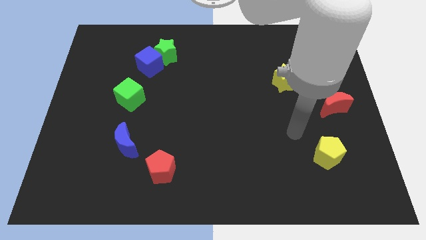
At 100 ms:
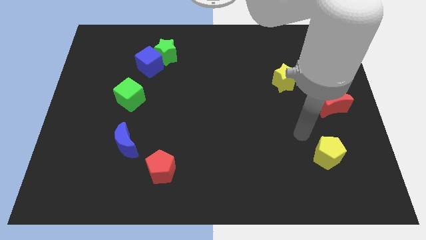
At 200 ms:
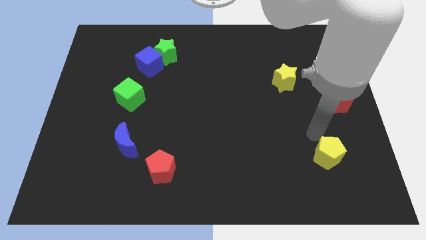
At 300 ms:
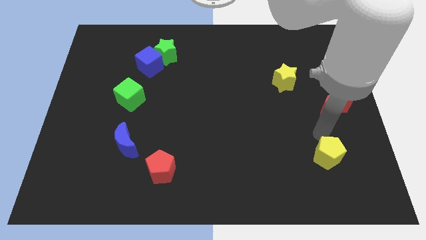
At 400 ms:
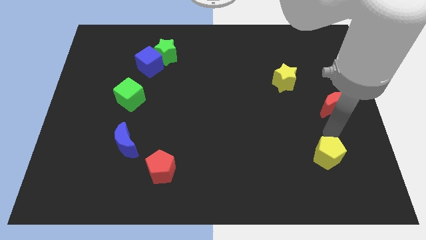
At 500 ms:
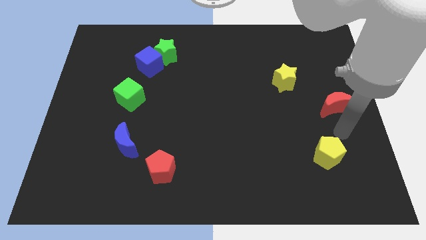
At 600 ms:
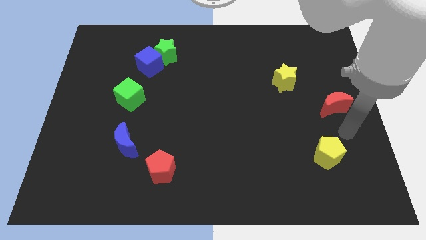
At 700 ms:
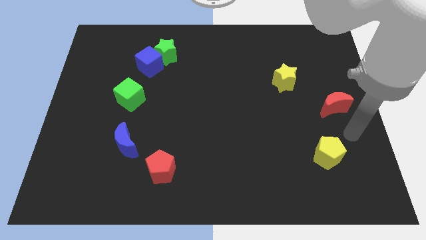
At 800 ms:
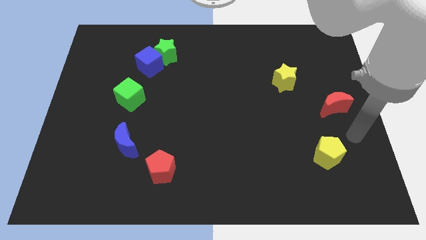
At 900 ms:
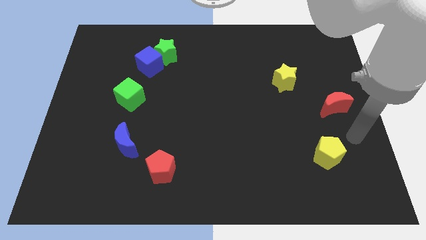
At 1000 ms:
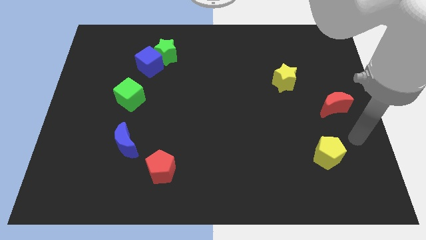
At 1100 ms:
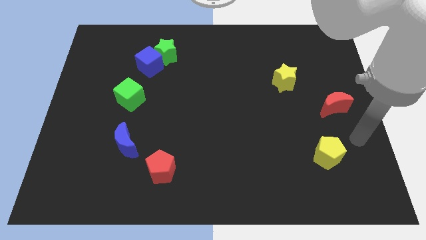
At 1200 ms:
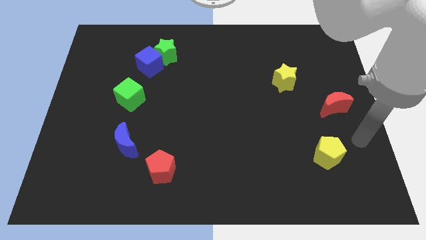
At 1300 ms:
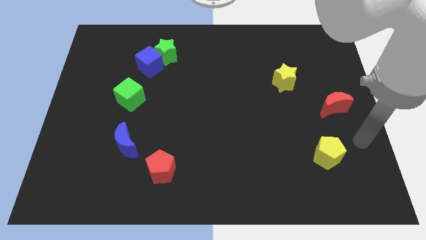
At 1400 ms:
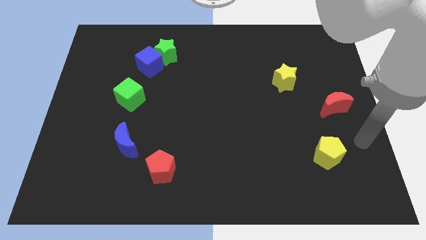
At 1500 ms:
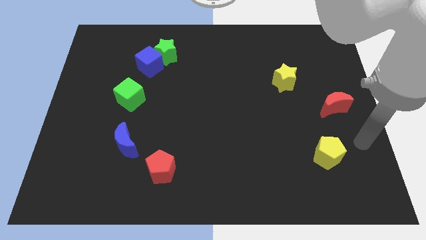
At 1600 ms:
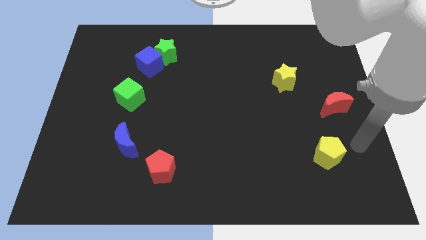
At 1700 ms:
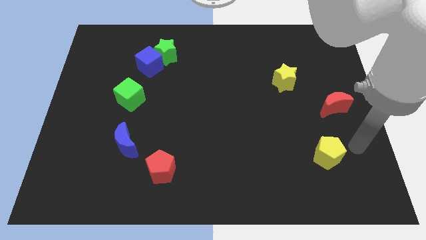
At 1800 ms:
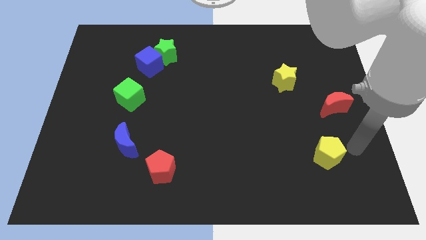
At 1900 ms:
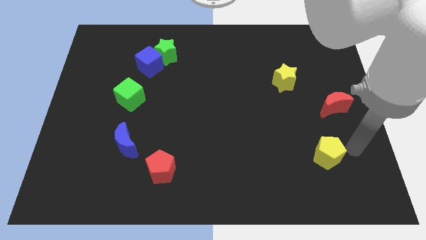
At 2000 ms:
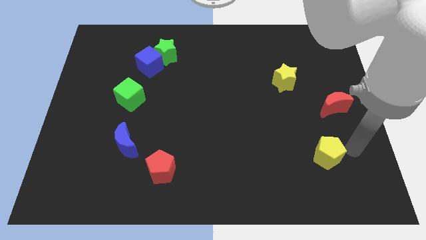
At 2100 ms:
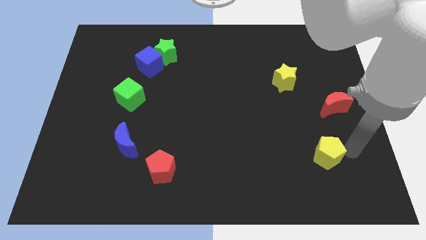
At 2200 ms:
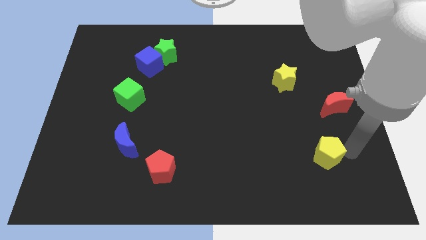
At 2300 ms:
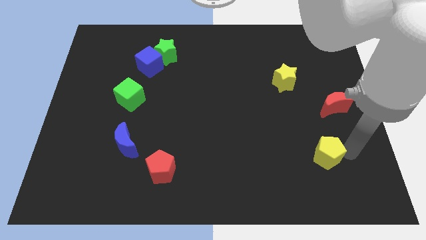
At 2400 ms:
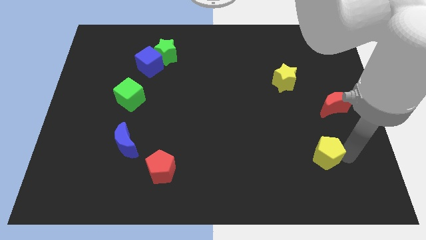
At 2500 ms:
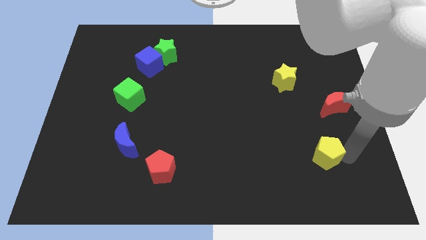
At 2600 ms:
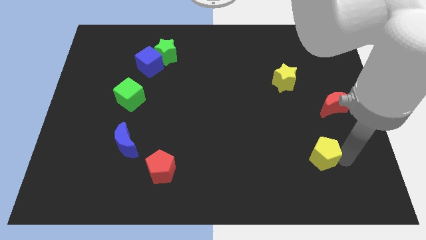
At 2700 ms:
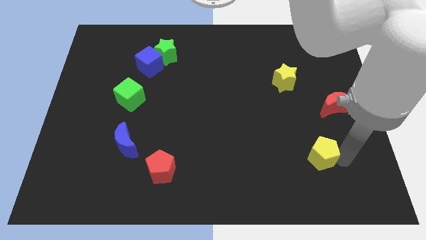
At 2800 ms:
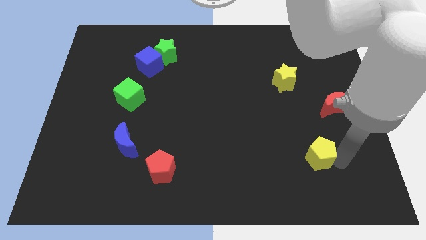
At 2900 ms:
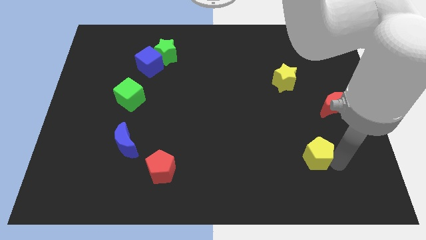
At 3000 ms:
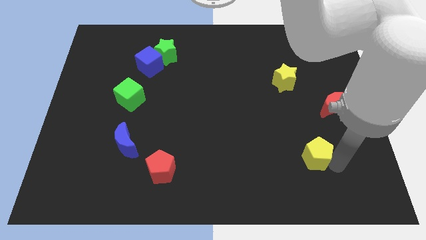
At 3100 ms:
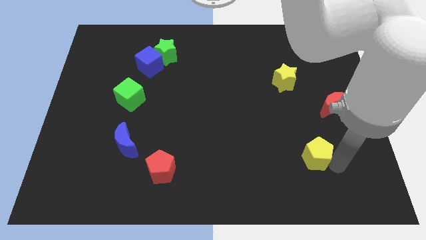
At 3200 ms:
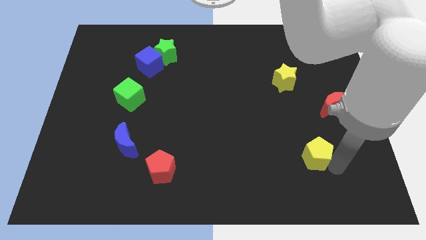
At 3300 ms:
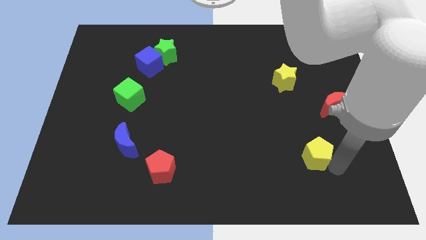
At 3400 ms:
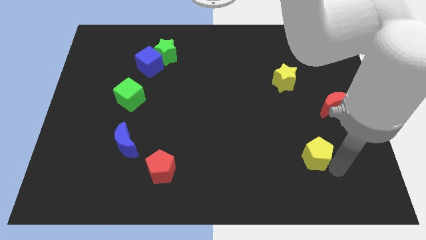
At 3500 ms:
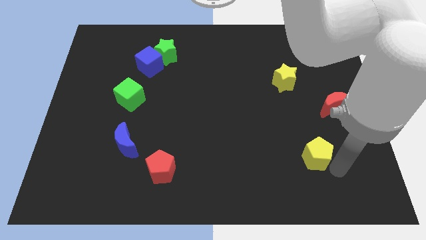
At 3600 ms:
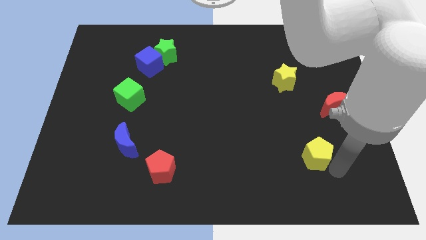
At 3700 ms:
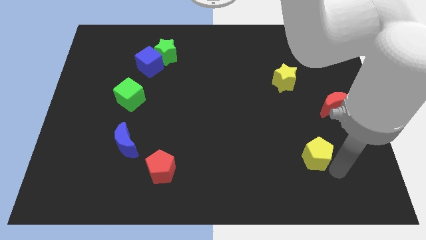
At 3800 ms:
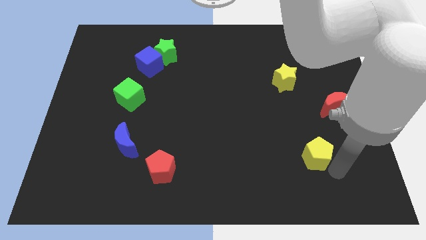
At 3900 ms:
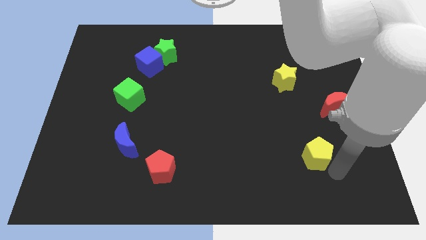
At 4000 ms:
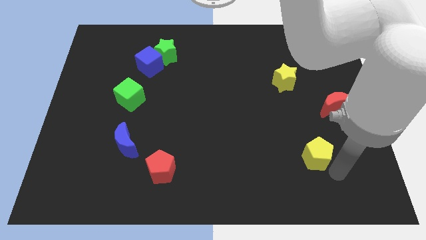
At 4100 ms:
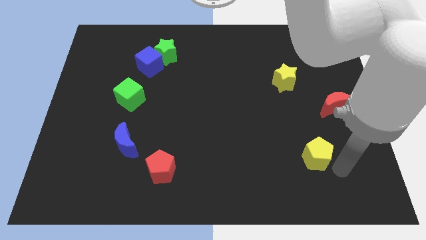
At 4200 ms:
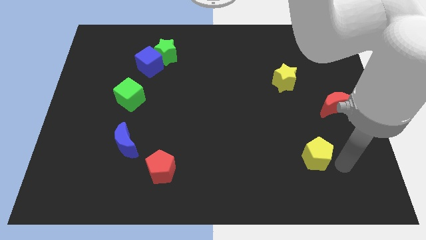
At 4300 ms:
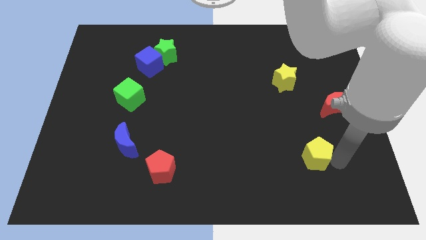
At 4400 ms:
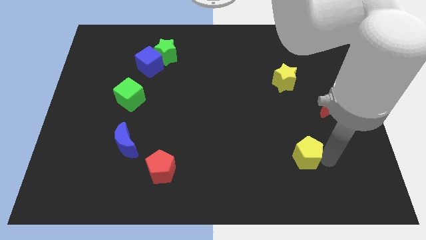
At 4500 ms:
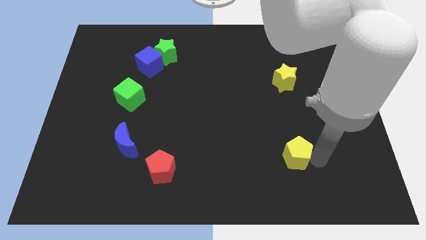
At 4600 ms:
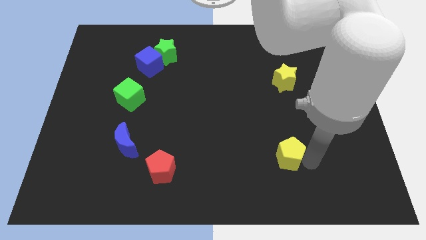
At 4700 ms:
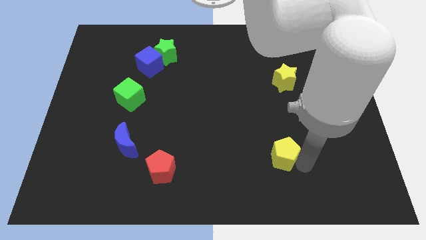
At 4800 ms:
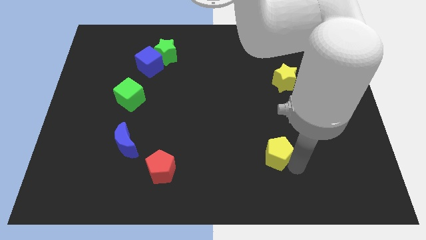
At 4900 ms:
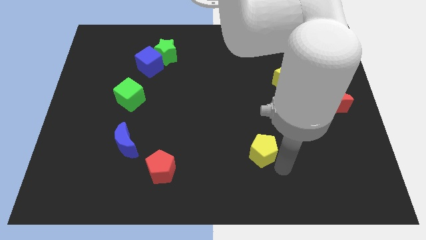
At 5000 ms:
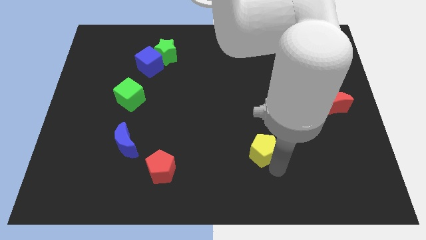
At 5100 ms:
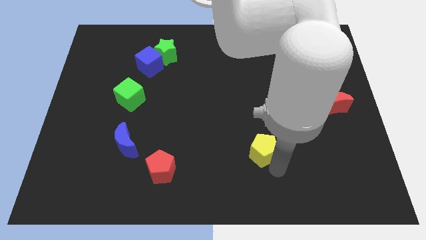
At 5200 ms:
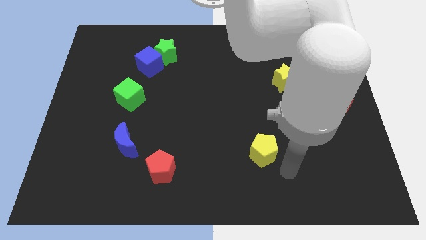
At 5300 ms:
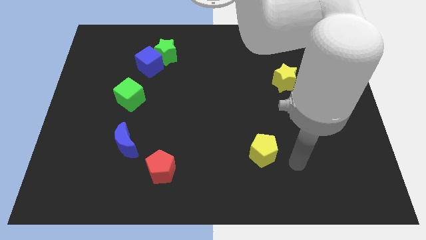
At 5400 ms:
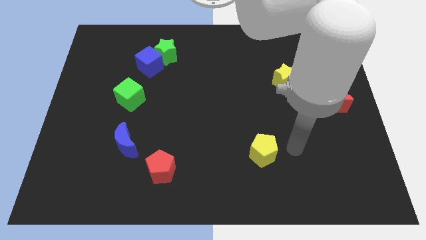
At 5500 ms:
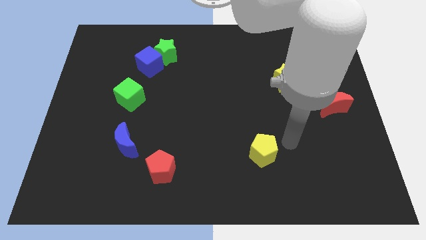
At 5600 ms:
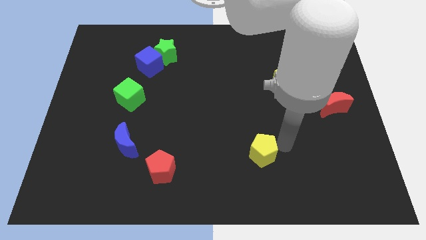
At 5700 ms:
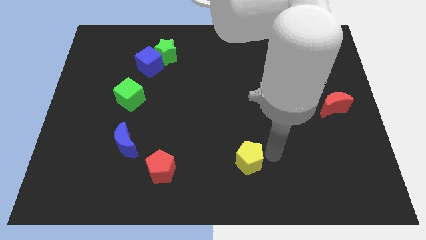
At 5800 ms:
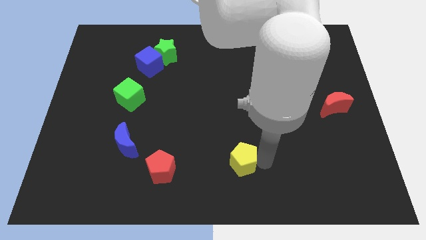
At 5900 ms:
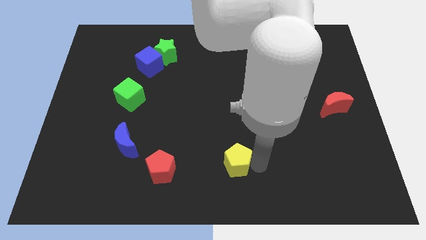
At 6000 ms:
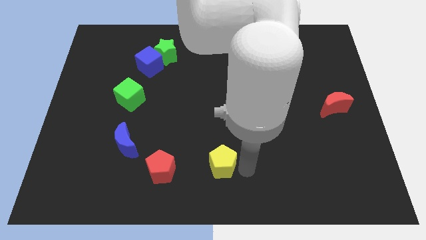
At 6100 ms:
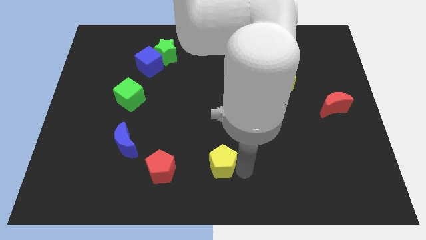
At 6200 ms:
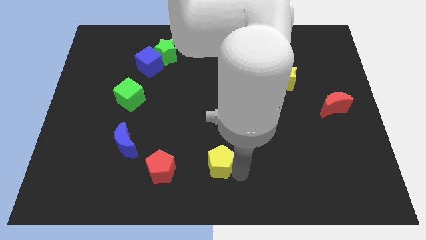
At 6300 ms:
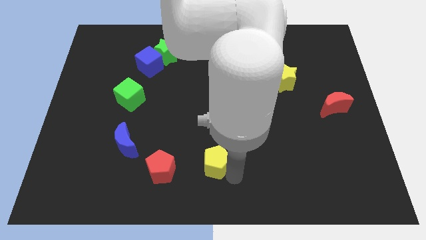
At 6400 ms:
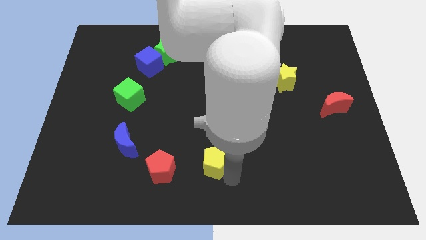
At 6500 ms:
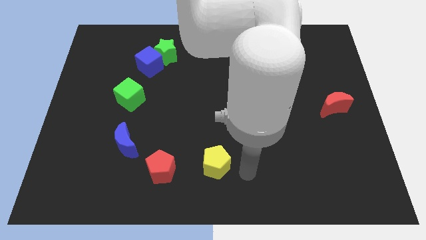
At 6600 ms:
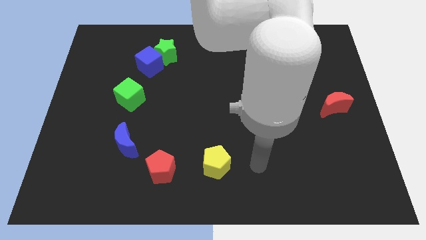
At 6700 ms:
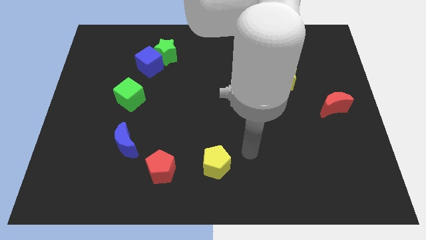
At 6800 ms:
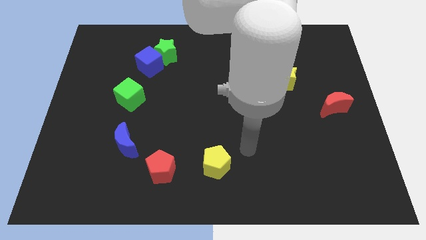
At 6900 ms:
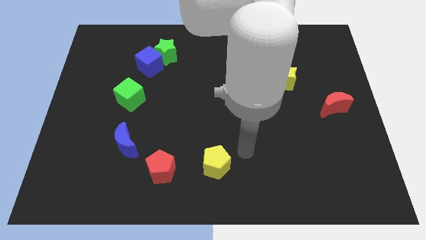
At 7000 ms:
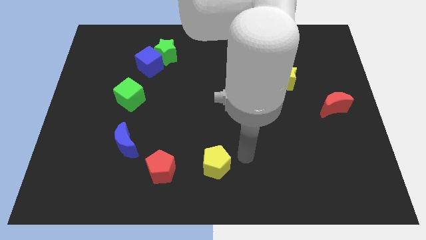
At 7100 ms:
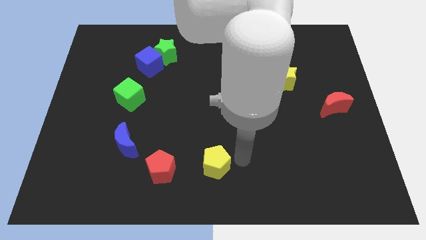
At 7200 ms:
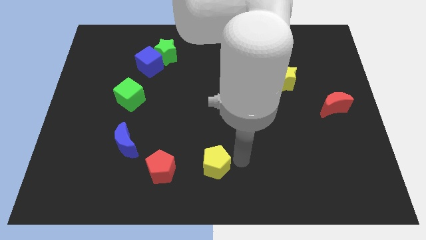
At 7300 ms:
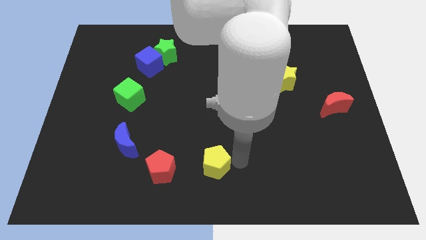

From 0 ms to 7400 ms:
push the yellow pentagon towards the red pentagon

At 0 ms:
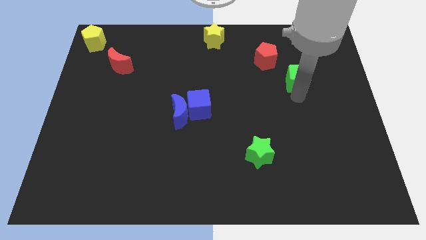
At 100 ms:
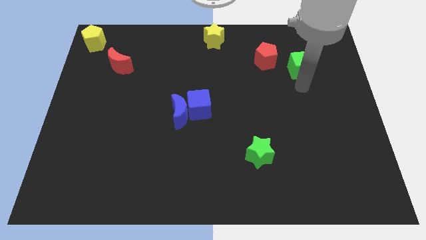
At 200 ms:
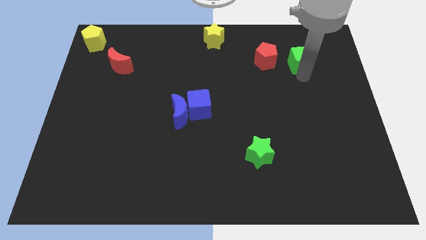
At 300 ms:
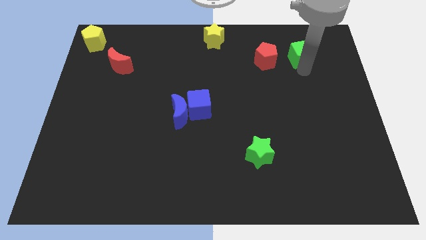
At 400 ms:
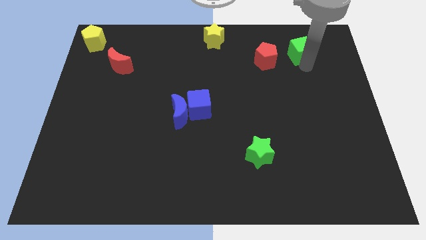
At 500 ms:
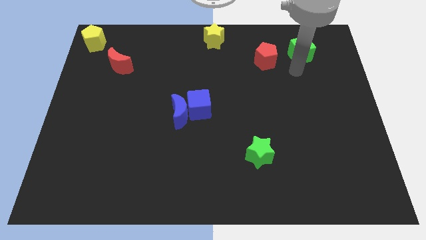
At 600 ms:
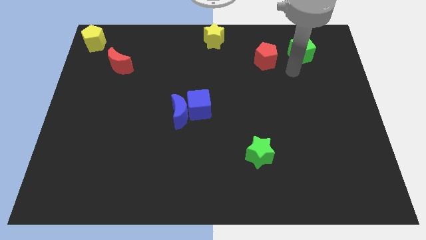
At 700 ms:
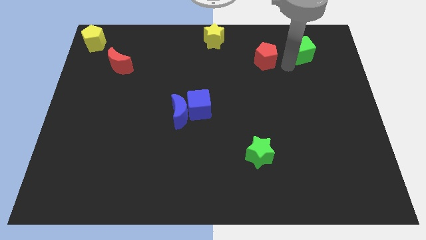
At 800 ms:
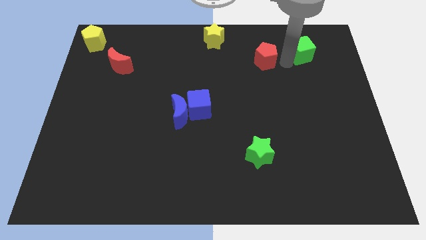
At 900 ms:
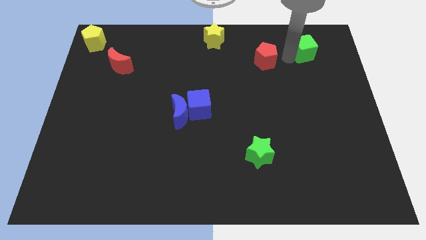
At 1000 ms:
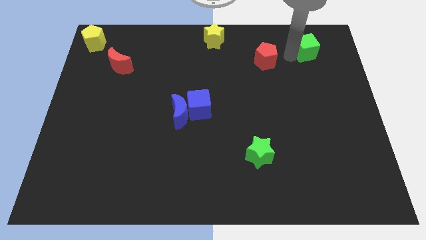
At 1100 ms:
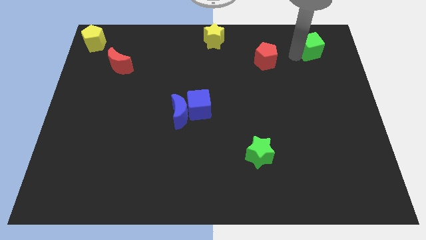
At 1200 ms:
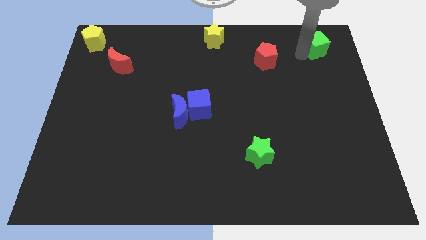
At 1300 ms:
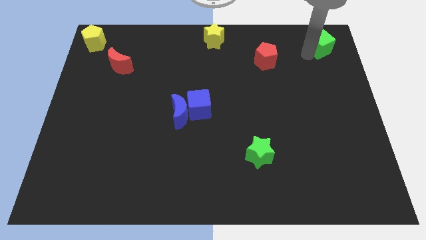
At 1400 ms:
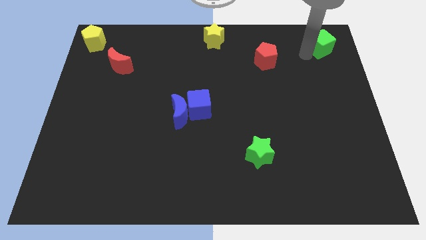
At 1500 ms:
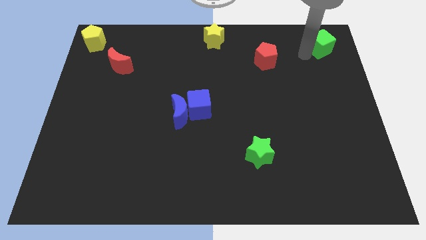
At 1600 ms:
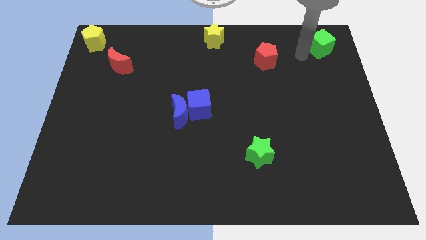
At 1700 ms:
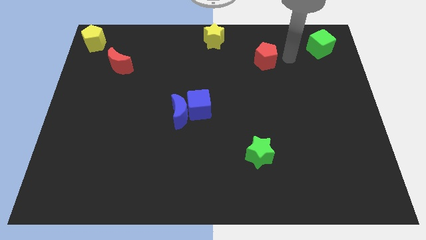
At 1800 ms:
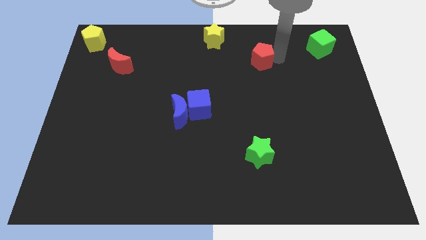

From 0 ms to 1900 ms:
push the green cube to the top right corner of the board
